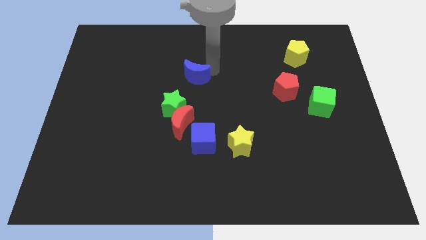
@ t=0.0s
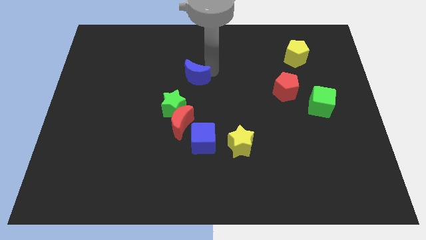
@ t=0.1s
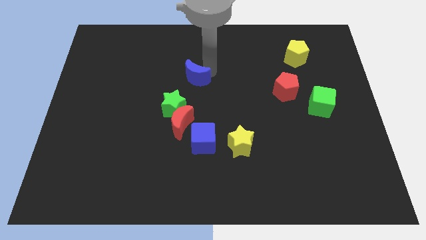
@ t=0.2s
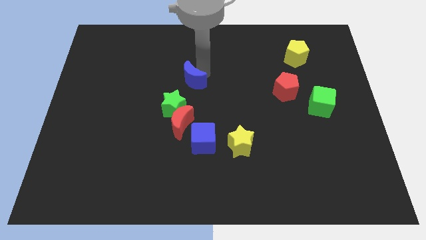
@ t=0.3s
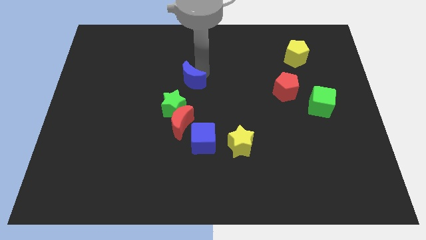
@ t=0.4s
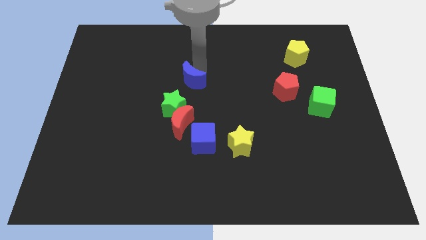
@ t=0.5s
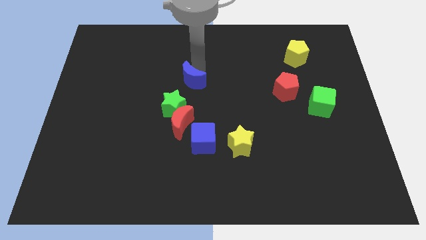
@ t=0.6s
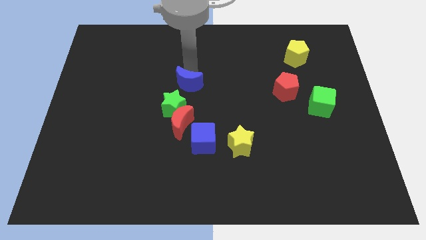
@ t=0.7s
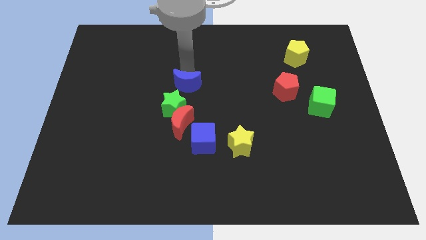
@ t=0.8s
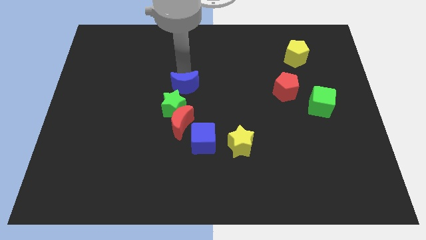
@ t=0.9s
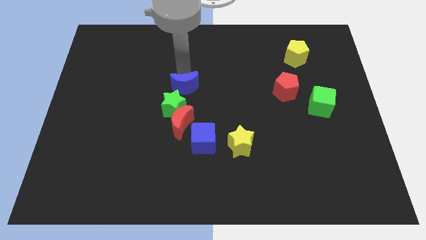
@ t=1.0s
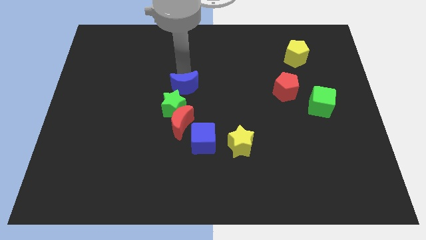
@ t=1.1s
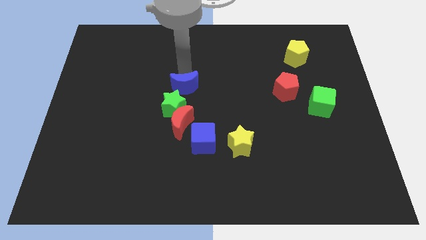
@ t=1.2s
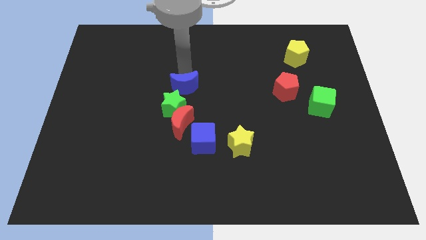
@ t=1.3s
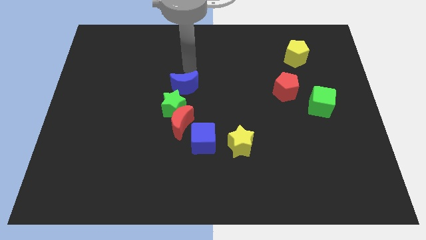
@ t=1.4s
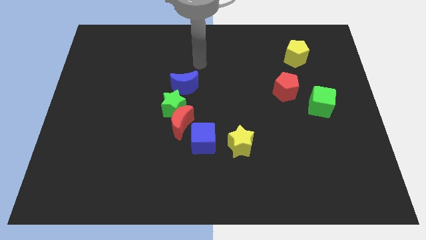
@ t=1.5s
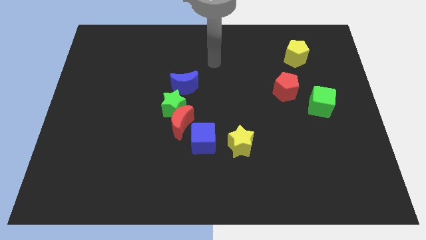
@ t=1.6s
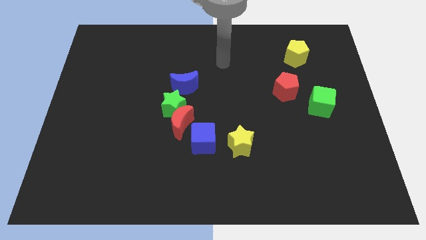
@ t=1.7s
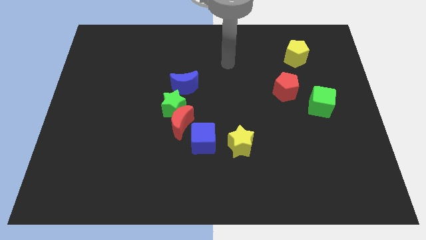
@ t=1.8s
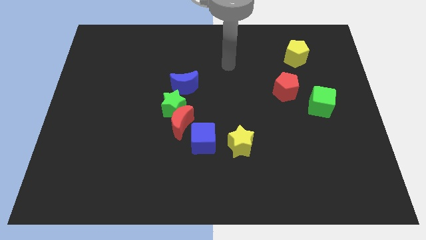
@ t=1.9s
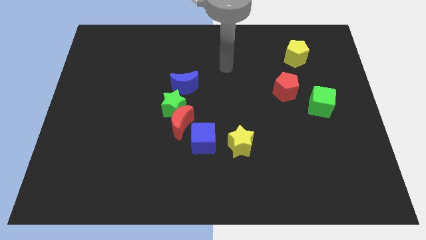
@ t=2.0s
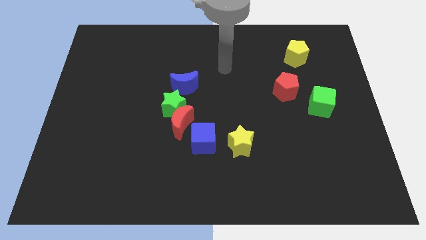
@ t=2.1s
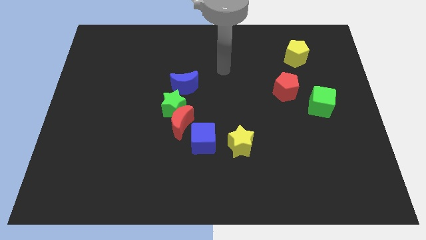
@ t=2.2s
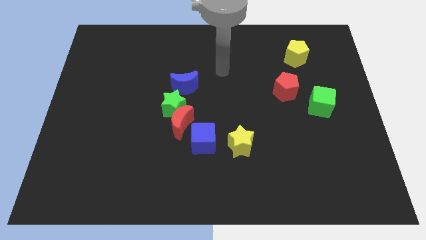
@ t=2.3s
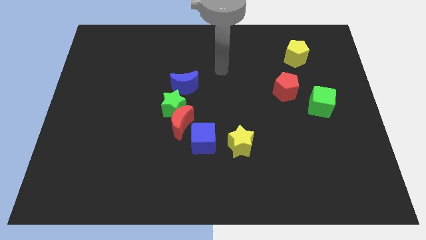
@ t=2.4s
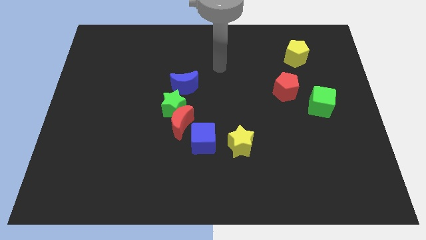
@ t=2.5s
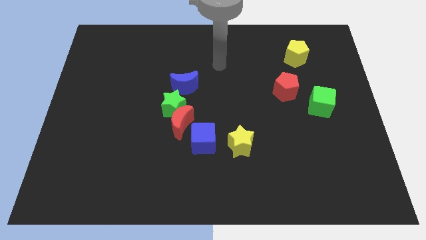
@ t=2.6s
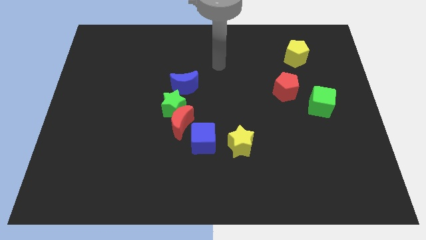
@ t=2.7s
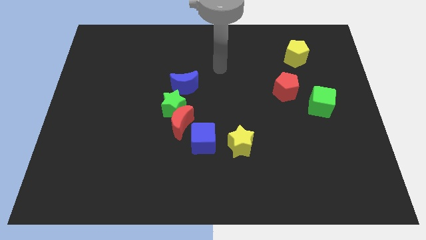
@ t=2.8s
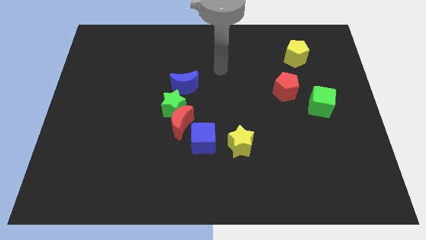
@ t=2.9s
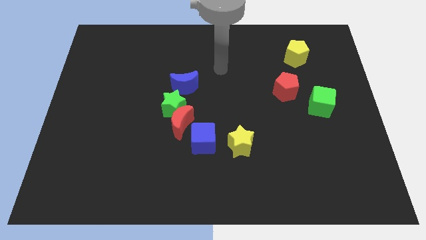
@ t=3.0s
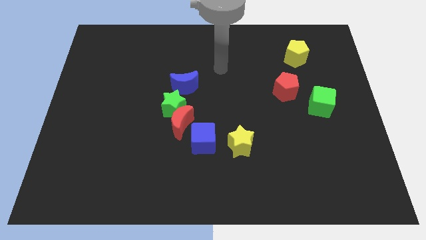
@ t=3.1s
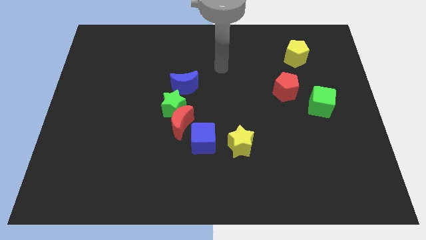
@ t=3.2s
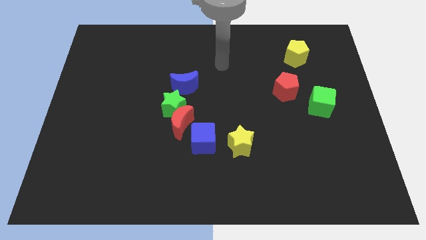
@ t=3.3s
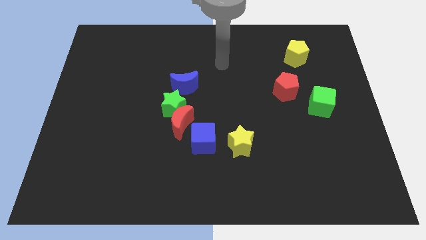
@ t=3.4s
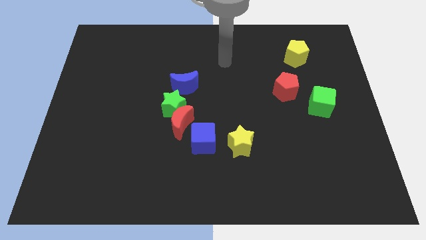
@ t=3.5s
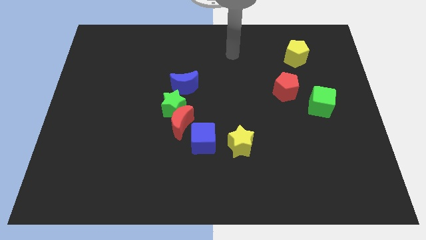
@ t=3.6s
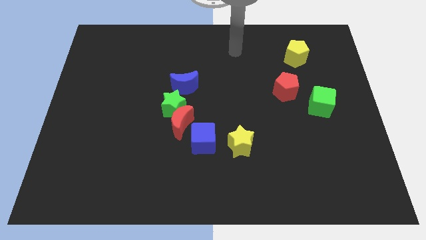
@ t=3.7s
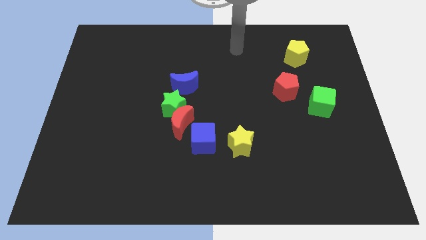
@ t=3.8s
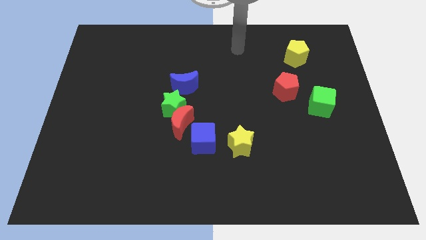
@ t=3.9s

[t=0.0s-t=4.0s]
put the blue moon at the top right side of green star

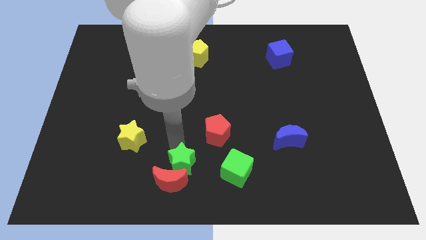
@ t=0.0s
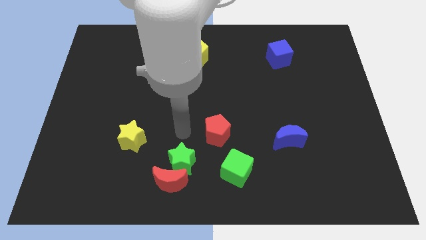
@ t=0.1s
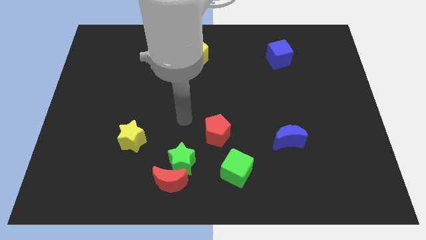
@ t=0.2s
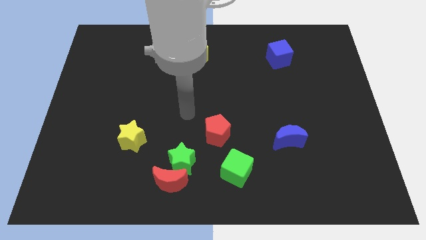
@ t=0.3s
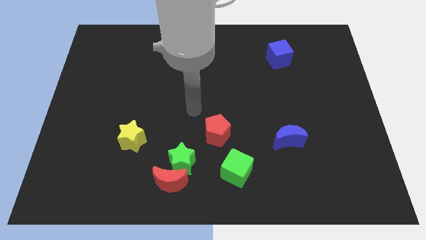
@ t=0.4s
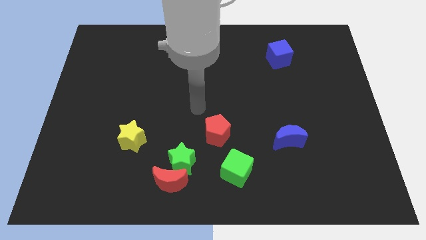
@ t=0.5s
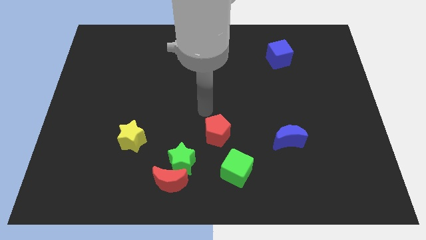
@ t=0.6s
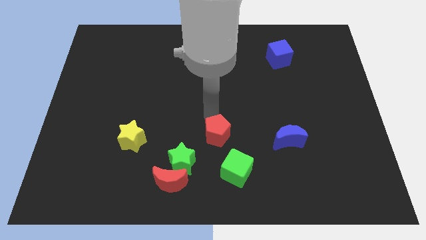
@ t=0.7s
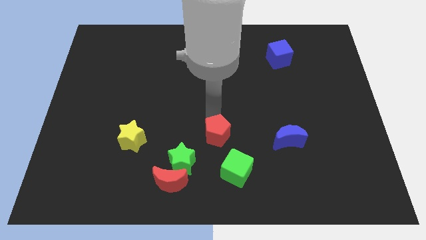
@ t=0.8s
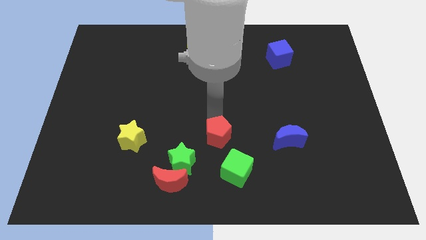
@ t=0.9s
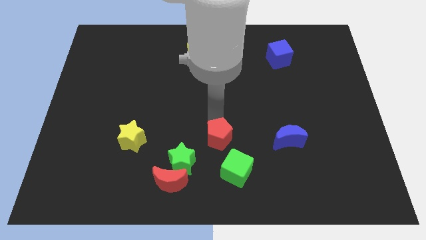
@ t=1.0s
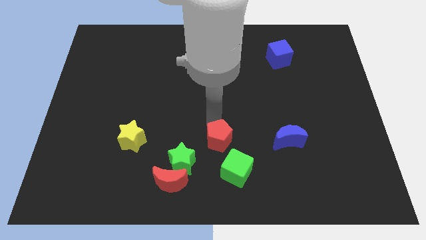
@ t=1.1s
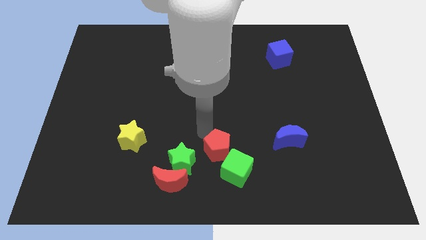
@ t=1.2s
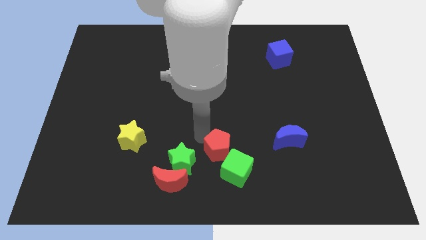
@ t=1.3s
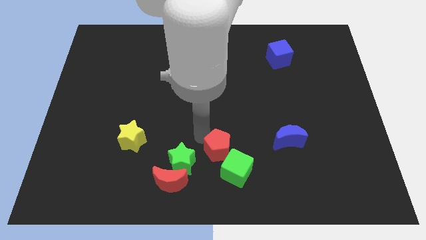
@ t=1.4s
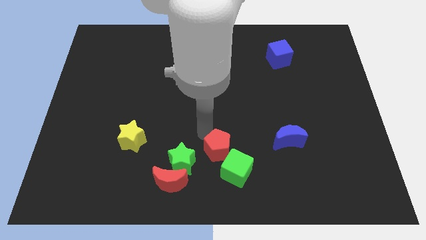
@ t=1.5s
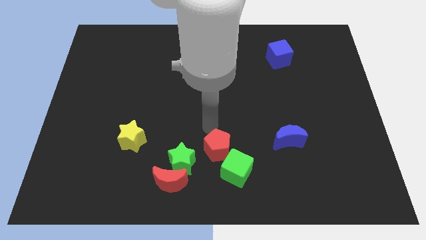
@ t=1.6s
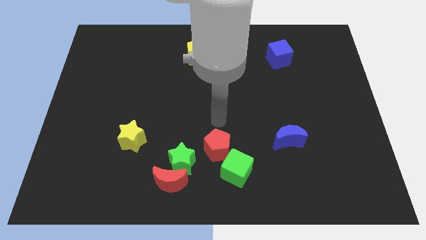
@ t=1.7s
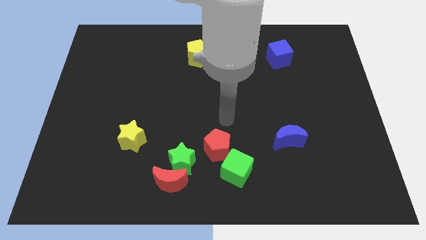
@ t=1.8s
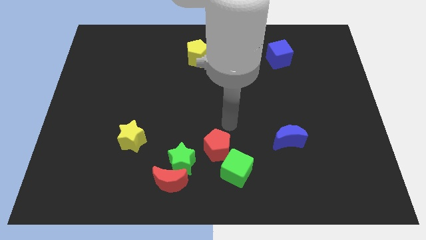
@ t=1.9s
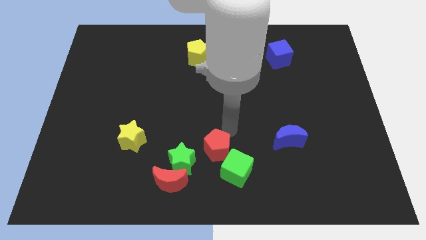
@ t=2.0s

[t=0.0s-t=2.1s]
slightly push red pentagon towards he green cube

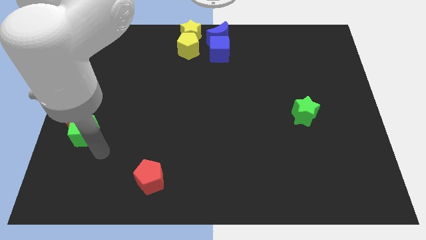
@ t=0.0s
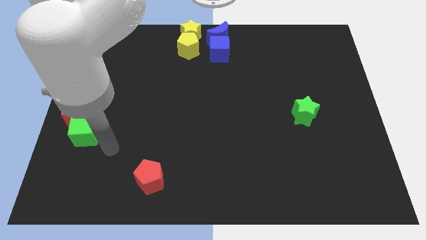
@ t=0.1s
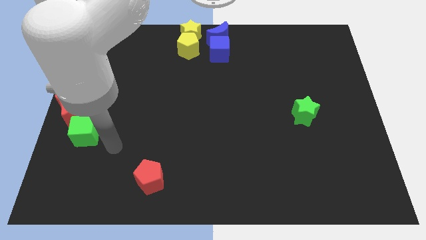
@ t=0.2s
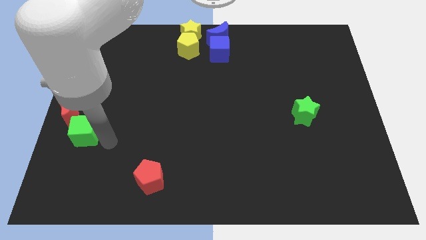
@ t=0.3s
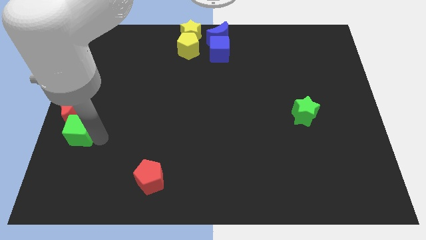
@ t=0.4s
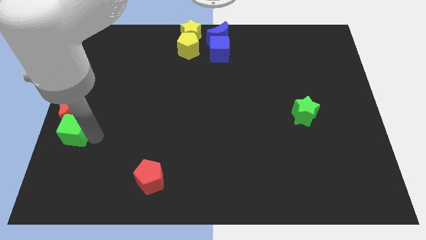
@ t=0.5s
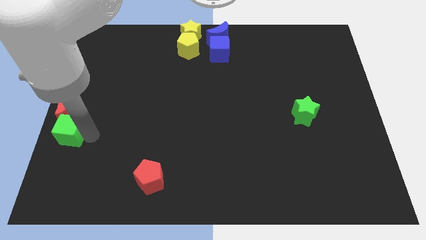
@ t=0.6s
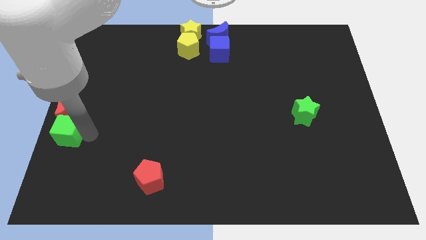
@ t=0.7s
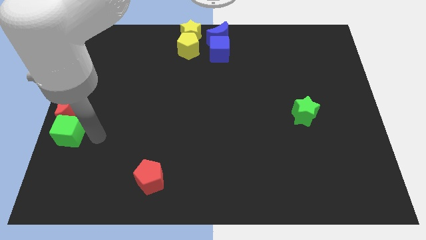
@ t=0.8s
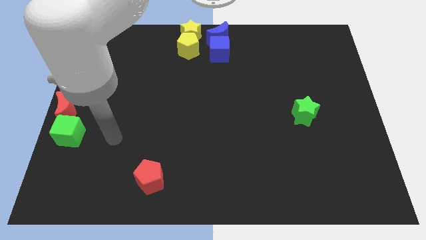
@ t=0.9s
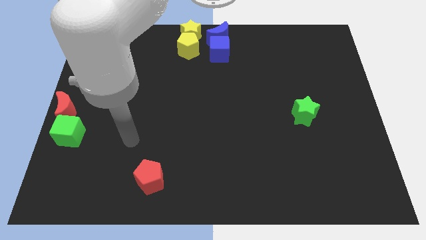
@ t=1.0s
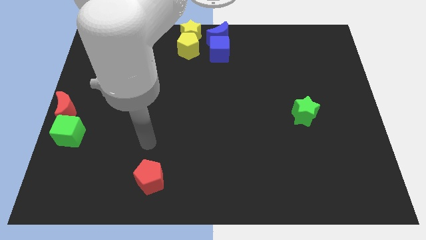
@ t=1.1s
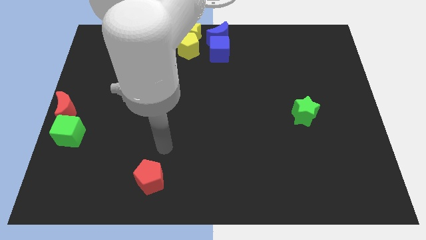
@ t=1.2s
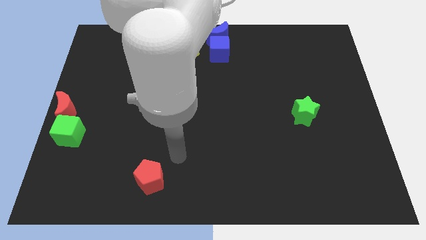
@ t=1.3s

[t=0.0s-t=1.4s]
push the green cube to the leftbottom of the red crescent

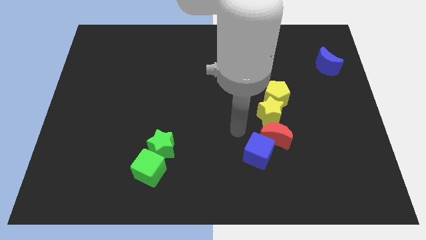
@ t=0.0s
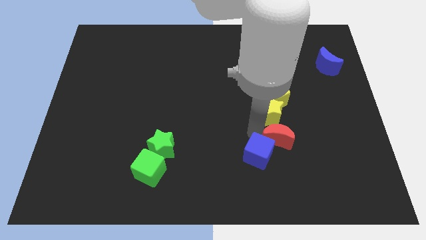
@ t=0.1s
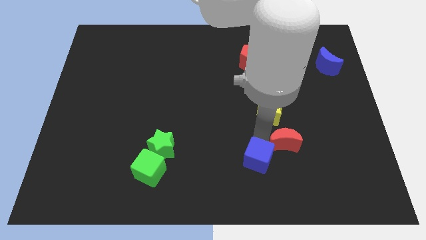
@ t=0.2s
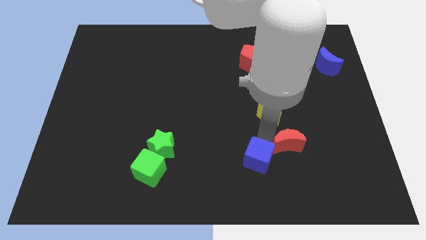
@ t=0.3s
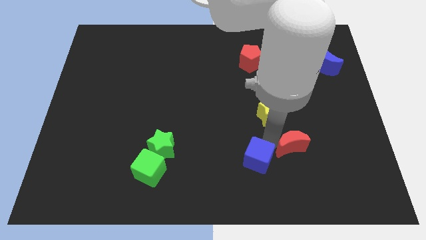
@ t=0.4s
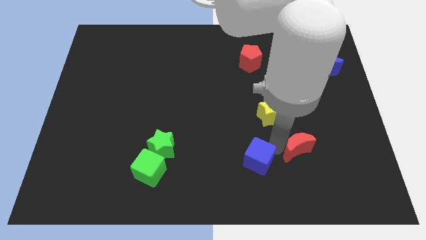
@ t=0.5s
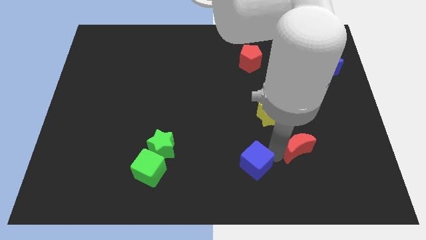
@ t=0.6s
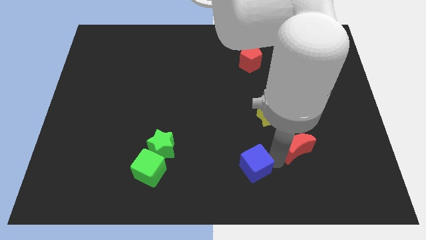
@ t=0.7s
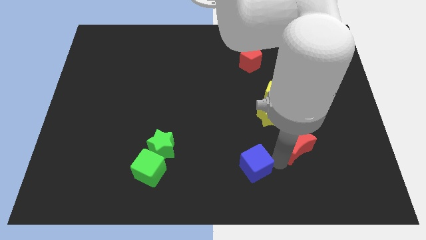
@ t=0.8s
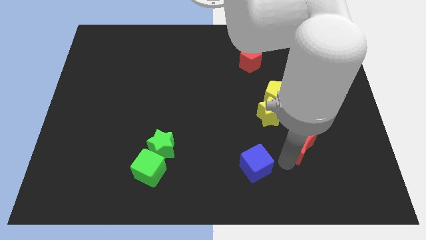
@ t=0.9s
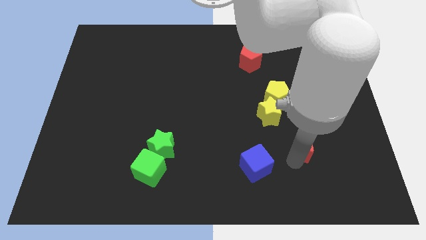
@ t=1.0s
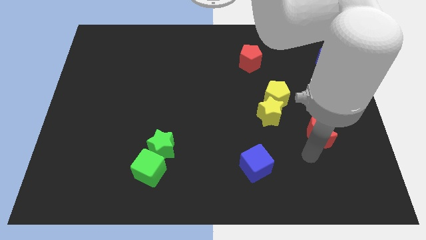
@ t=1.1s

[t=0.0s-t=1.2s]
separate the blue cube and red moon

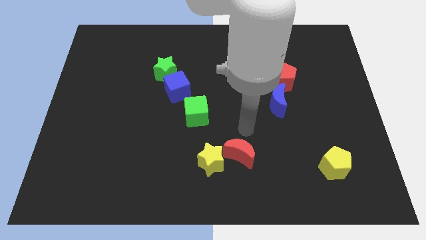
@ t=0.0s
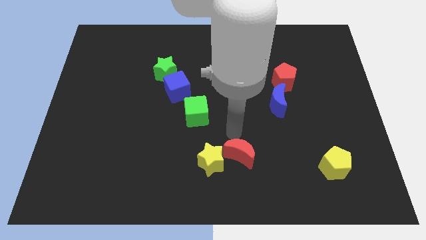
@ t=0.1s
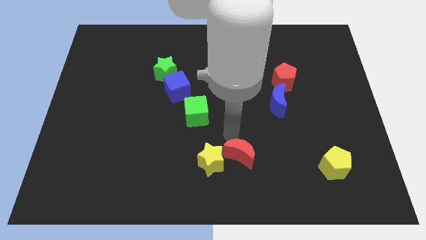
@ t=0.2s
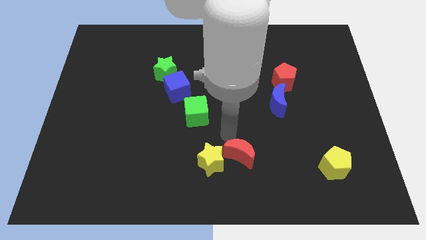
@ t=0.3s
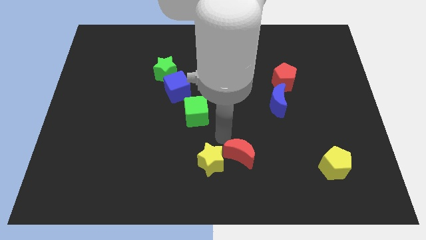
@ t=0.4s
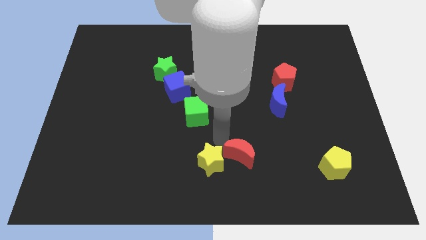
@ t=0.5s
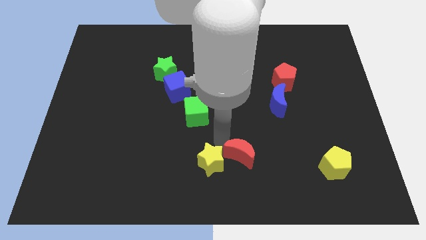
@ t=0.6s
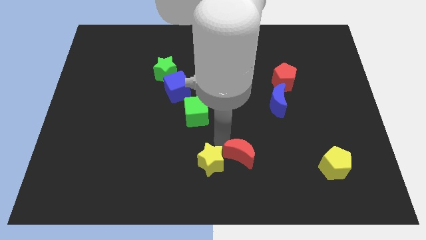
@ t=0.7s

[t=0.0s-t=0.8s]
point your arm above yellow star
